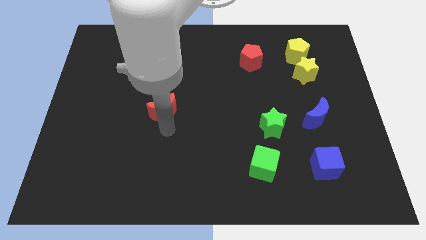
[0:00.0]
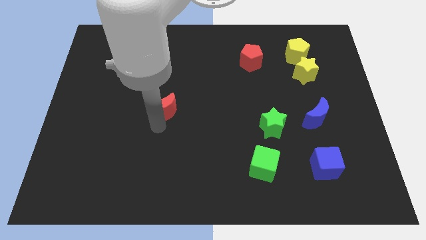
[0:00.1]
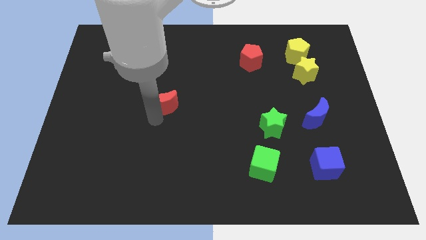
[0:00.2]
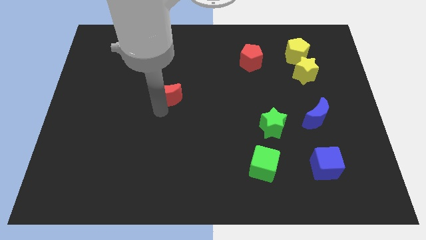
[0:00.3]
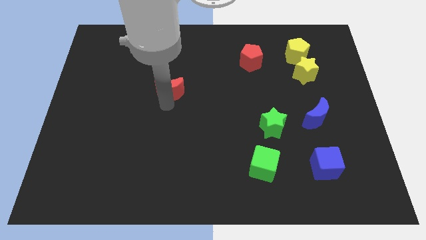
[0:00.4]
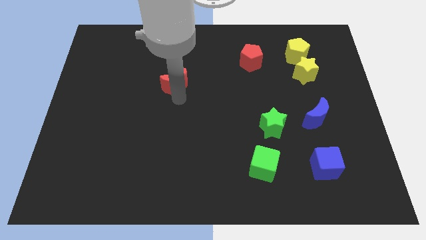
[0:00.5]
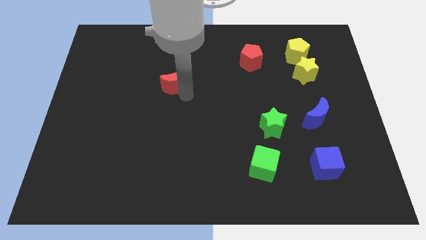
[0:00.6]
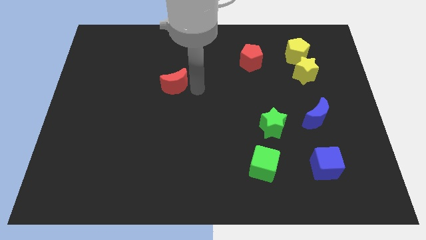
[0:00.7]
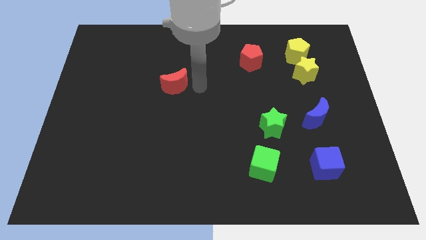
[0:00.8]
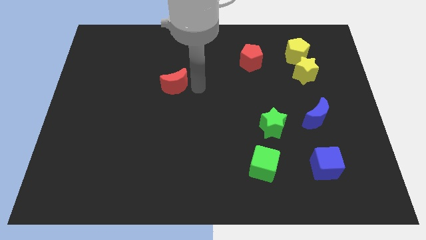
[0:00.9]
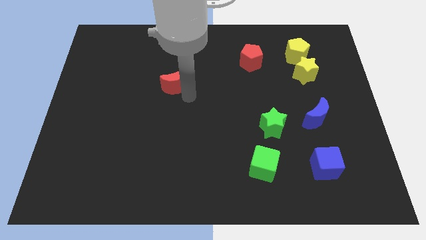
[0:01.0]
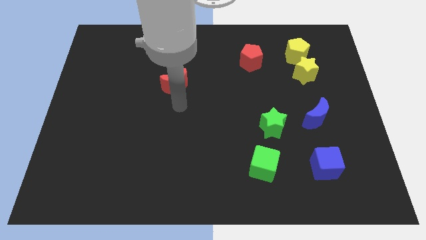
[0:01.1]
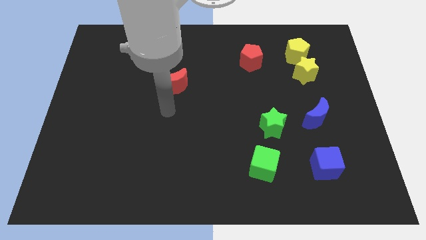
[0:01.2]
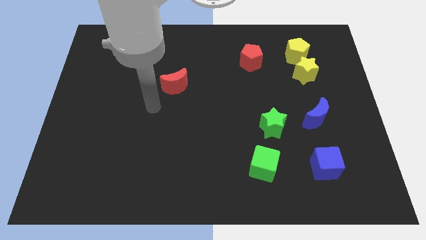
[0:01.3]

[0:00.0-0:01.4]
move the red crescent diagonal to the left bottom of the red pentagon

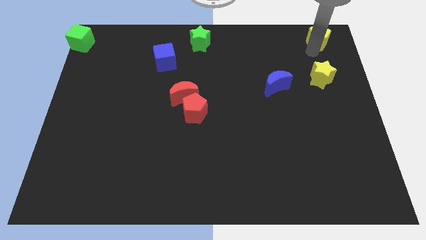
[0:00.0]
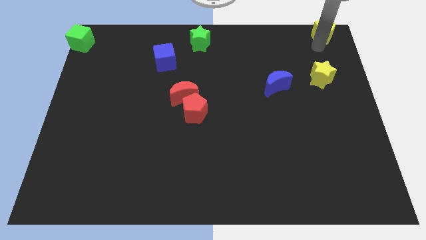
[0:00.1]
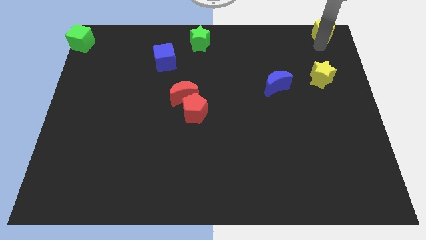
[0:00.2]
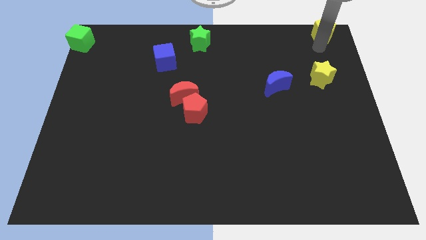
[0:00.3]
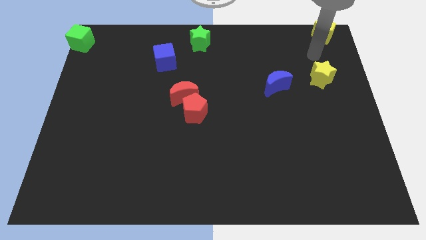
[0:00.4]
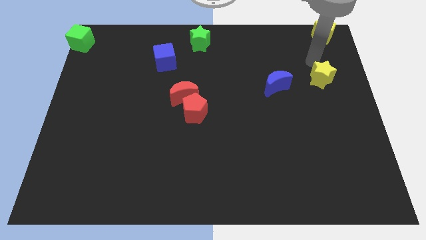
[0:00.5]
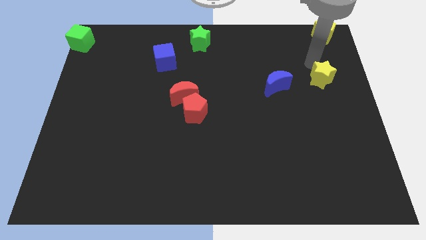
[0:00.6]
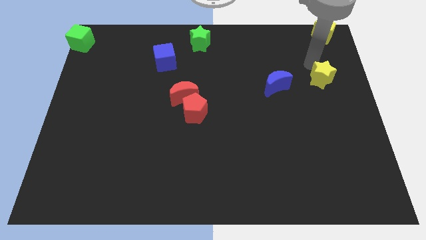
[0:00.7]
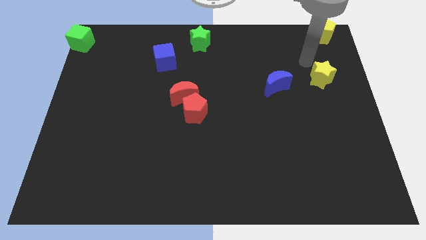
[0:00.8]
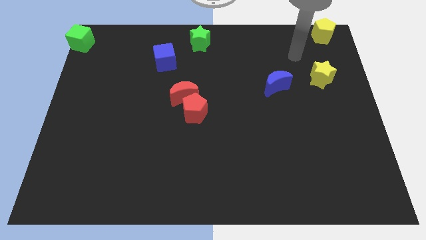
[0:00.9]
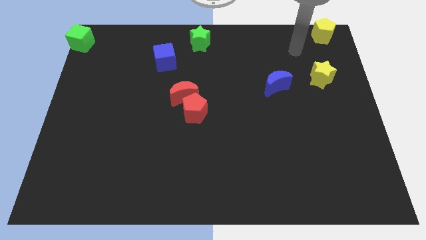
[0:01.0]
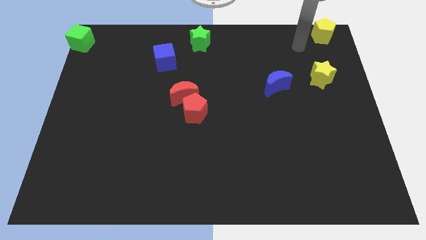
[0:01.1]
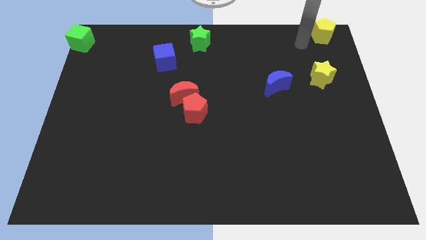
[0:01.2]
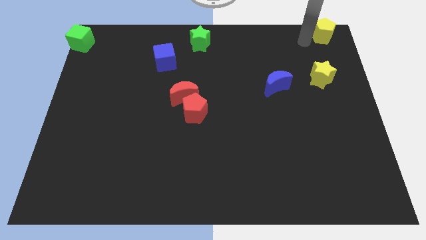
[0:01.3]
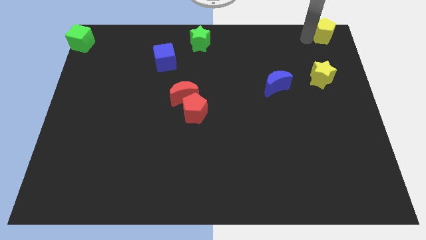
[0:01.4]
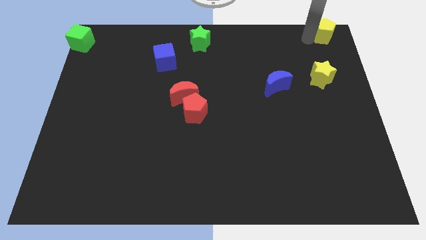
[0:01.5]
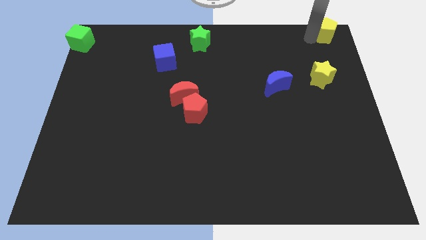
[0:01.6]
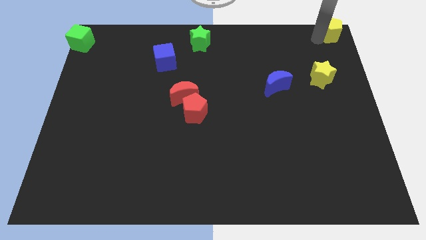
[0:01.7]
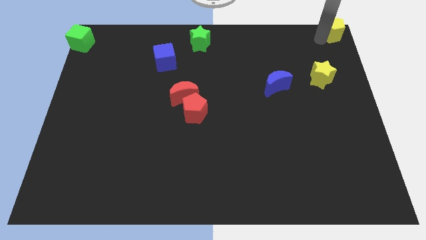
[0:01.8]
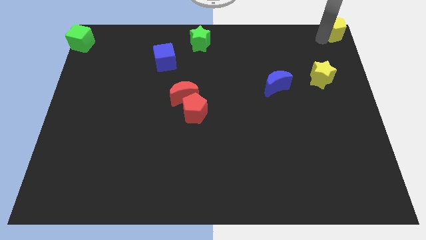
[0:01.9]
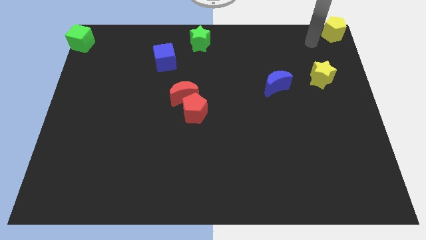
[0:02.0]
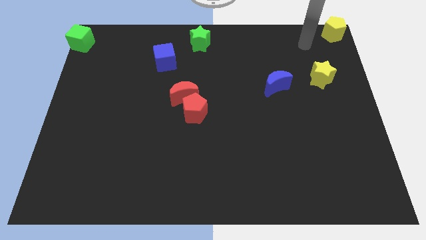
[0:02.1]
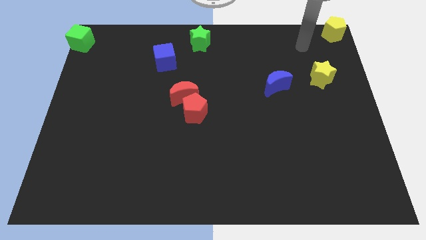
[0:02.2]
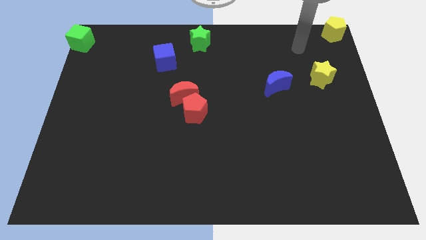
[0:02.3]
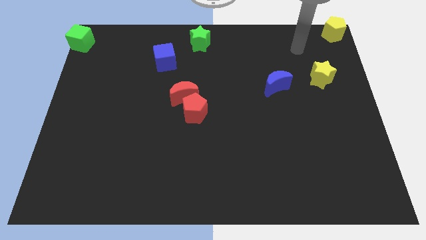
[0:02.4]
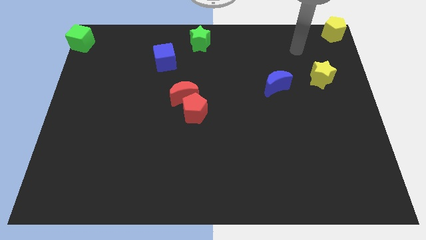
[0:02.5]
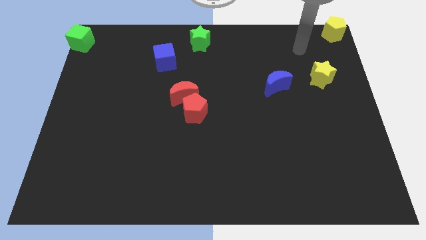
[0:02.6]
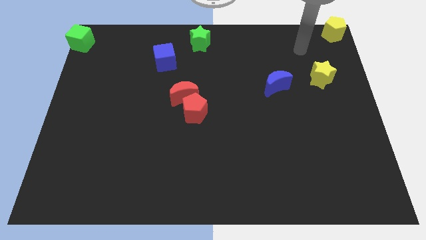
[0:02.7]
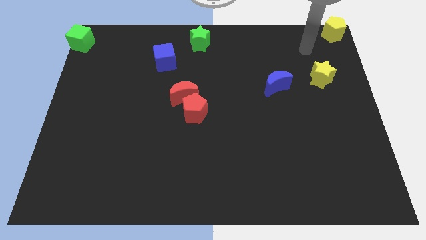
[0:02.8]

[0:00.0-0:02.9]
place the yellow pentagonto the top right corner

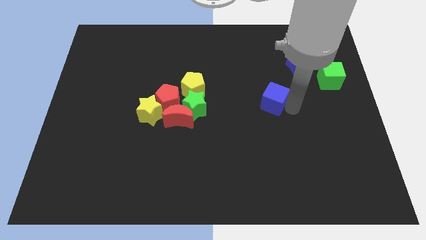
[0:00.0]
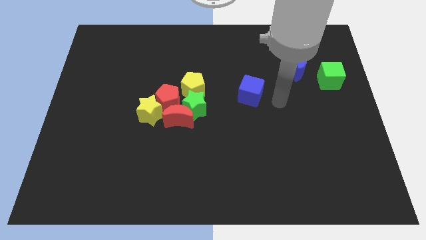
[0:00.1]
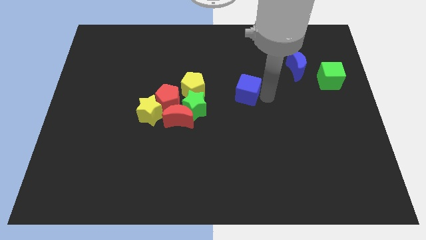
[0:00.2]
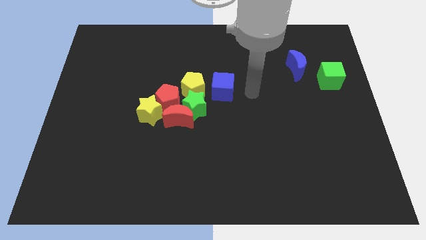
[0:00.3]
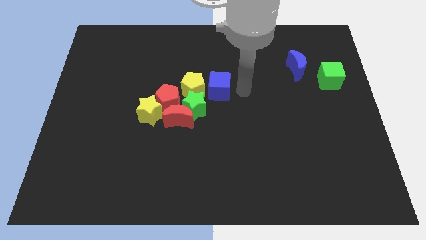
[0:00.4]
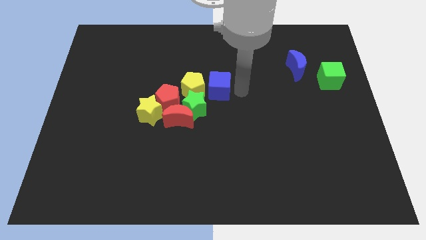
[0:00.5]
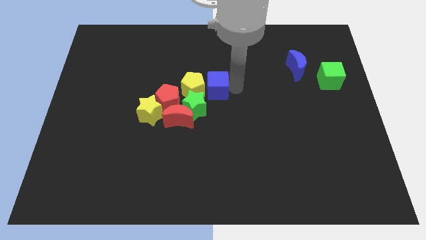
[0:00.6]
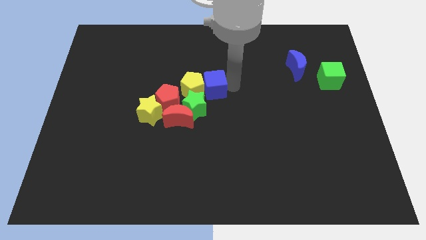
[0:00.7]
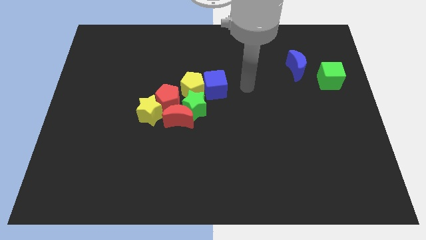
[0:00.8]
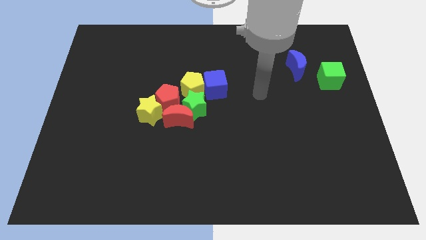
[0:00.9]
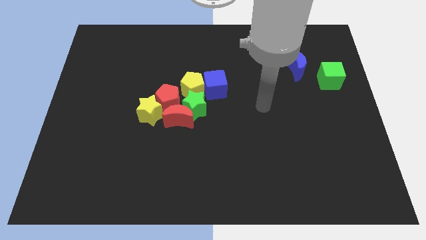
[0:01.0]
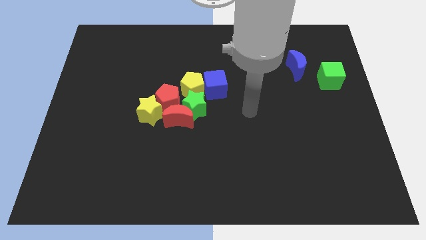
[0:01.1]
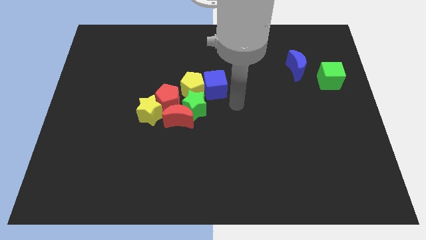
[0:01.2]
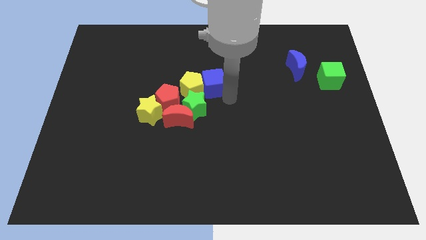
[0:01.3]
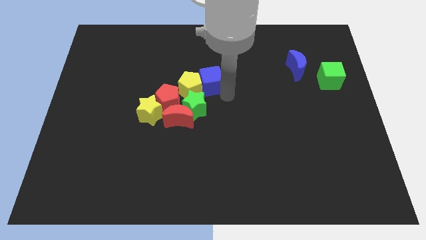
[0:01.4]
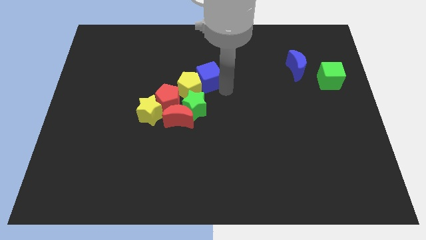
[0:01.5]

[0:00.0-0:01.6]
push the blue cube into the group of blocks

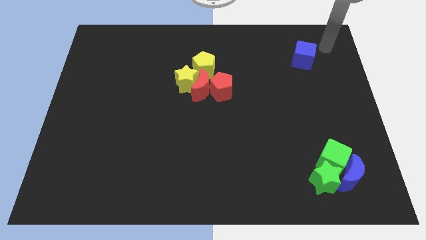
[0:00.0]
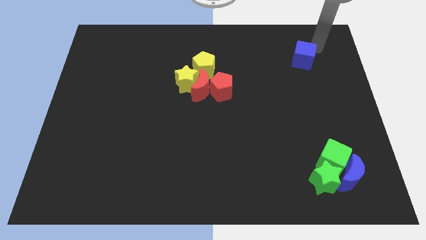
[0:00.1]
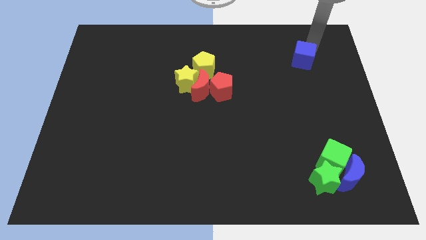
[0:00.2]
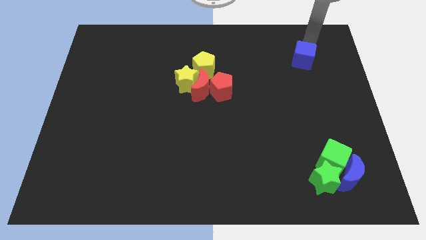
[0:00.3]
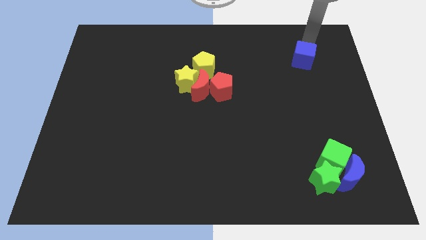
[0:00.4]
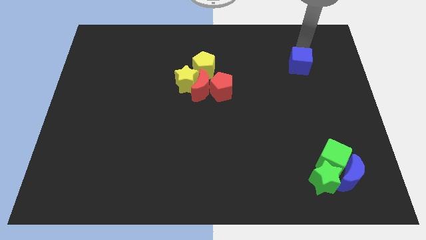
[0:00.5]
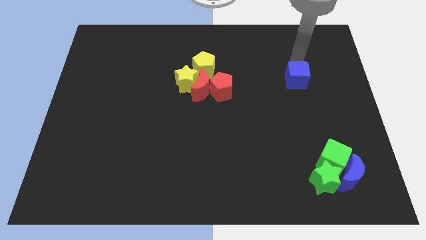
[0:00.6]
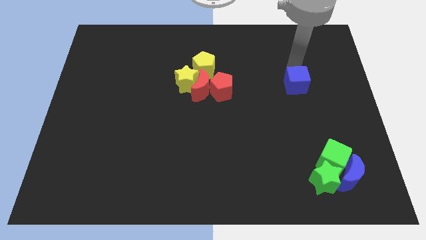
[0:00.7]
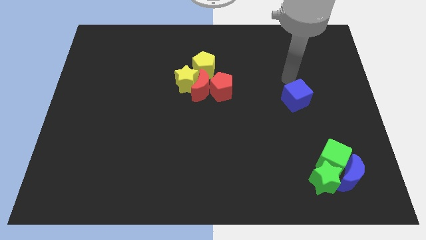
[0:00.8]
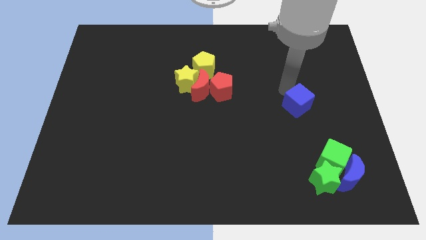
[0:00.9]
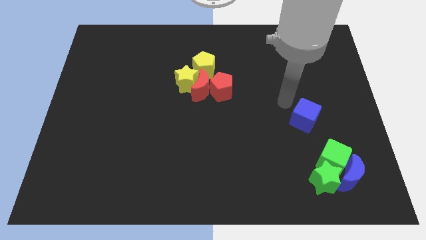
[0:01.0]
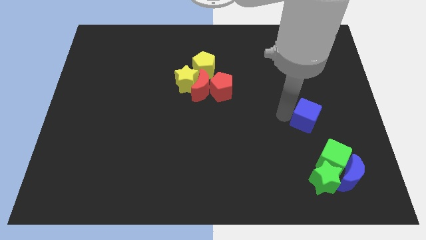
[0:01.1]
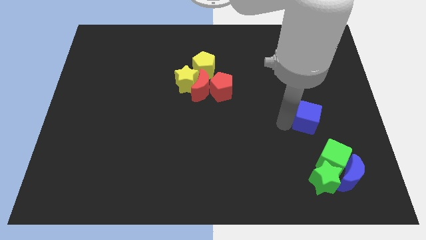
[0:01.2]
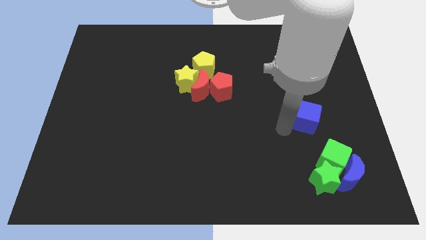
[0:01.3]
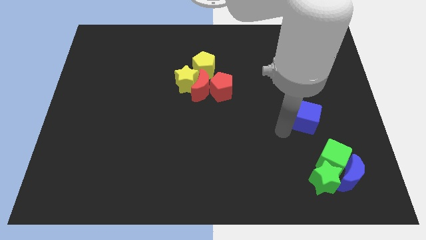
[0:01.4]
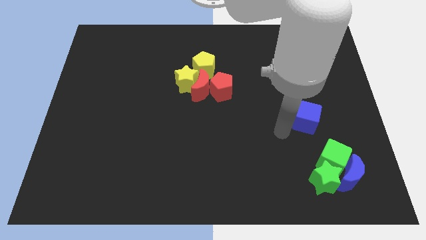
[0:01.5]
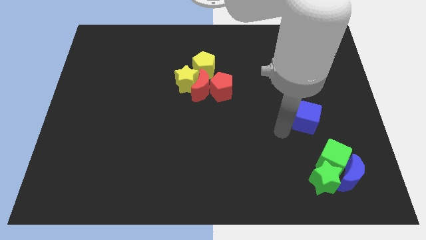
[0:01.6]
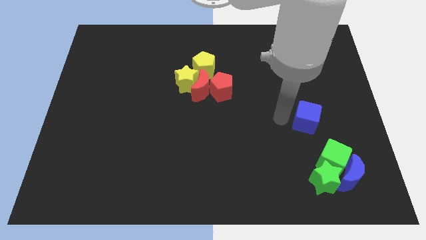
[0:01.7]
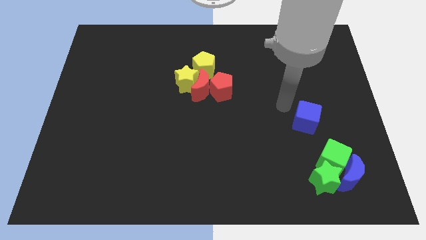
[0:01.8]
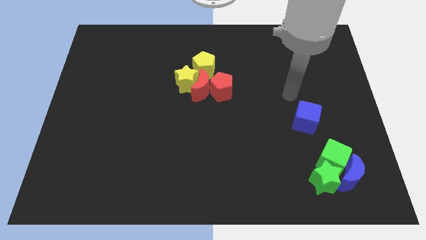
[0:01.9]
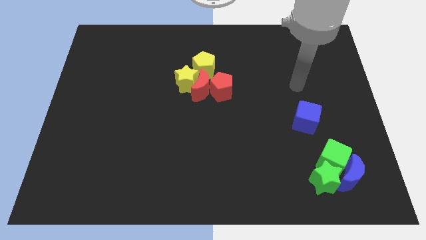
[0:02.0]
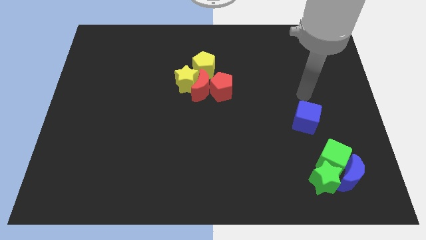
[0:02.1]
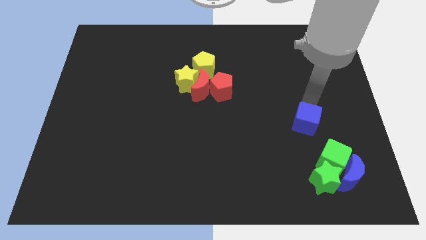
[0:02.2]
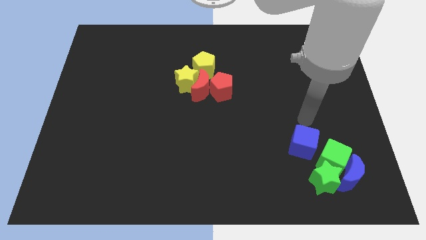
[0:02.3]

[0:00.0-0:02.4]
push blue cube towards green cube

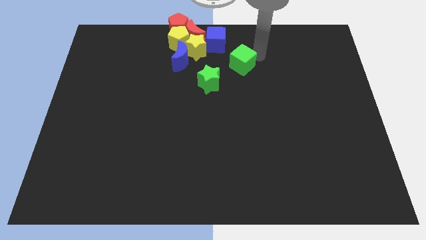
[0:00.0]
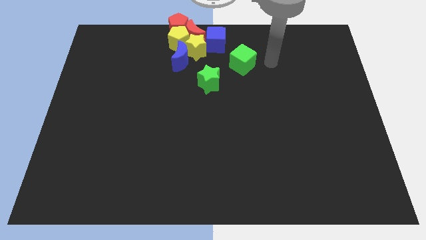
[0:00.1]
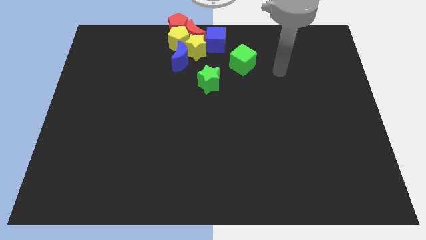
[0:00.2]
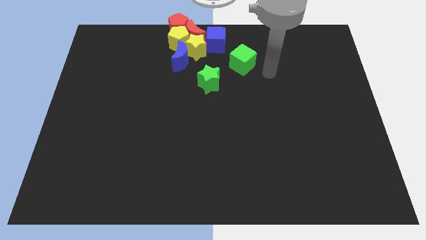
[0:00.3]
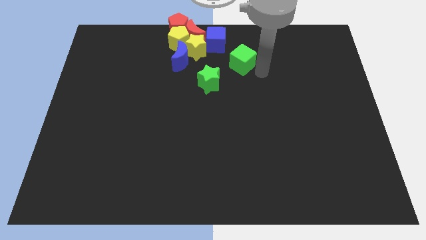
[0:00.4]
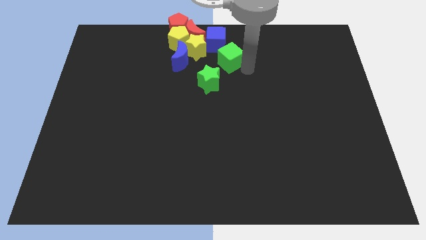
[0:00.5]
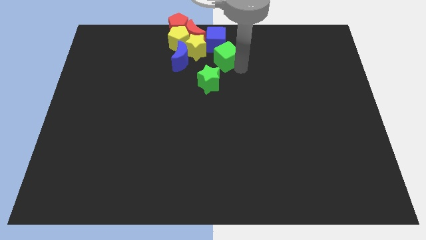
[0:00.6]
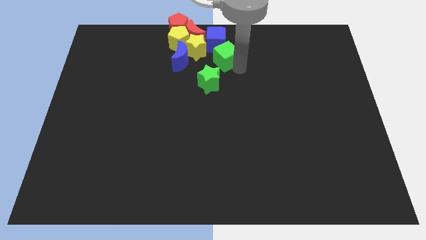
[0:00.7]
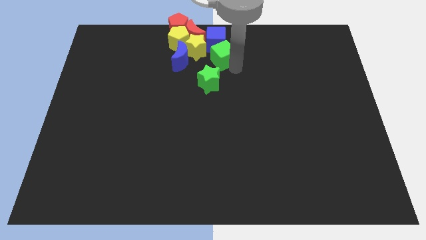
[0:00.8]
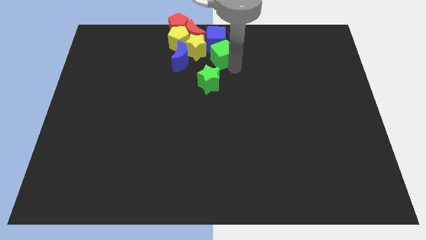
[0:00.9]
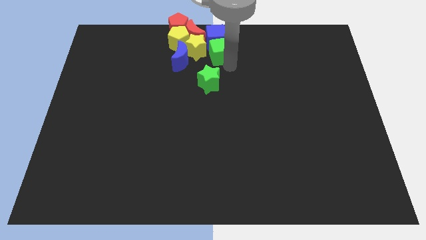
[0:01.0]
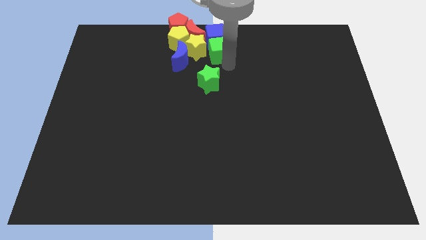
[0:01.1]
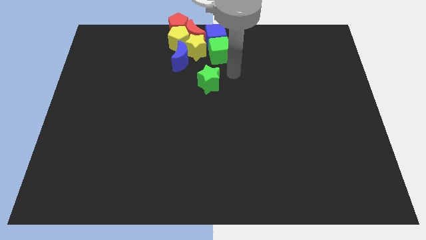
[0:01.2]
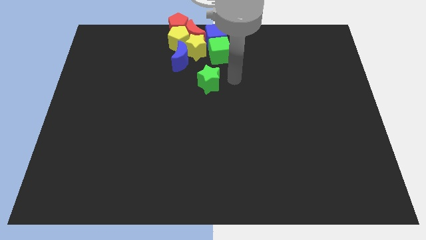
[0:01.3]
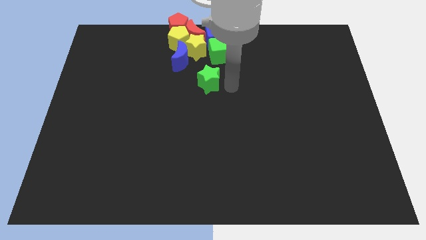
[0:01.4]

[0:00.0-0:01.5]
move the green cube below the blue cube
